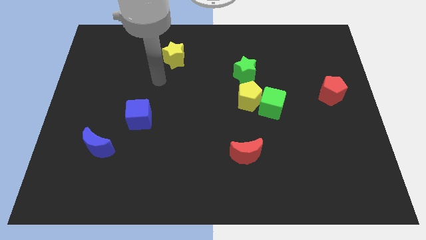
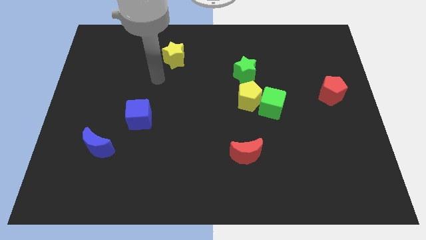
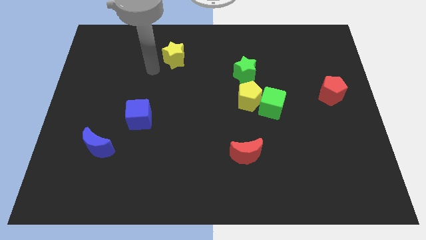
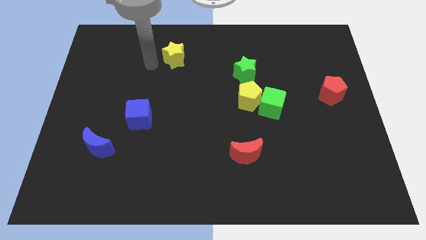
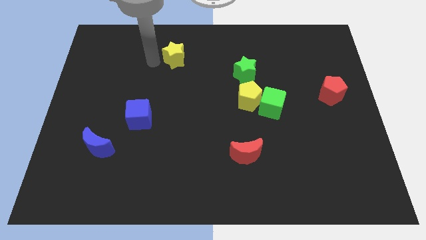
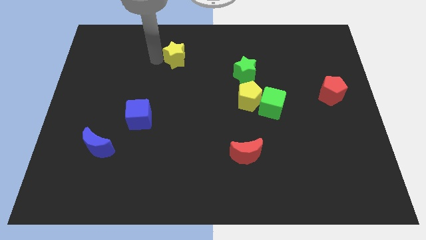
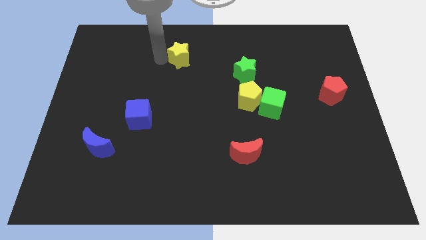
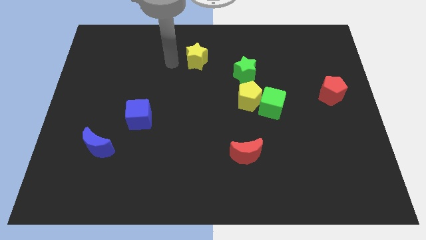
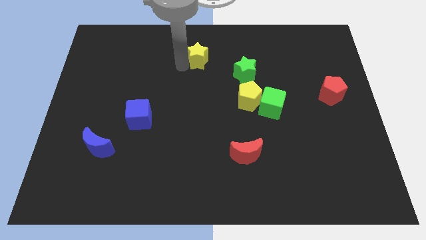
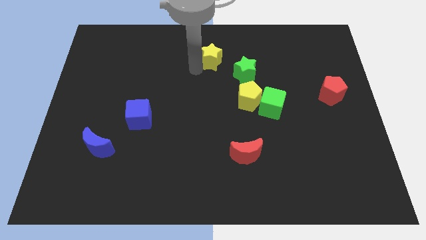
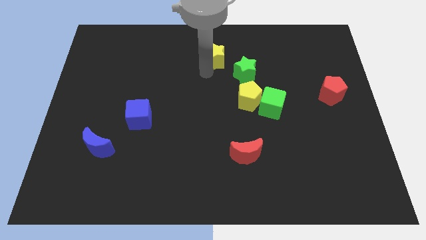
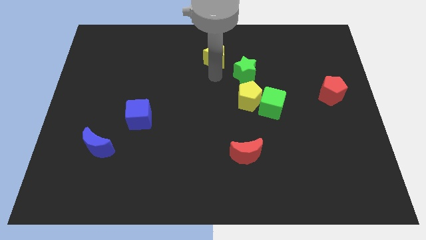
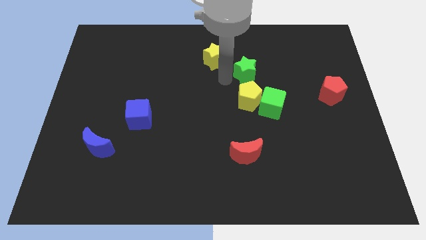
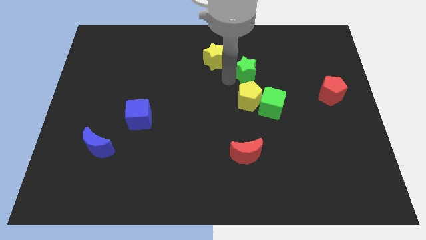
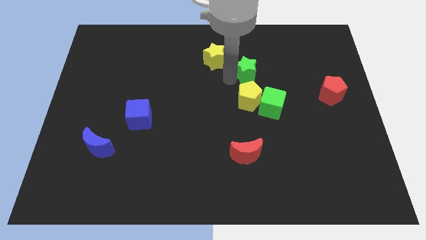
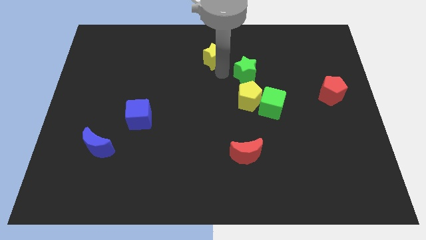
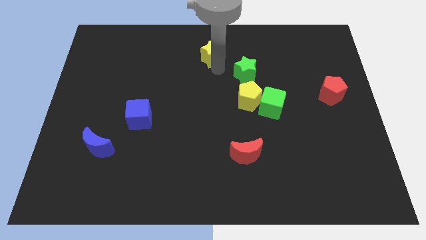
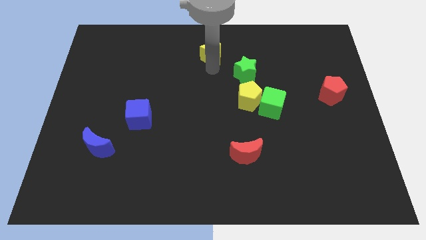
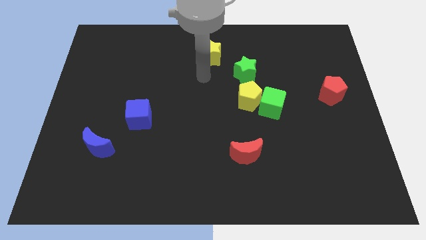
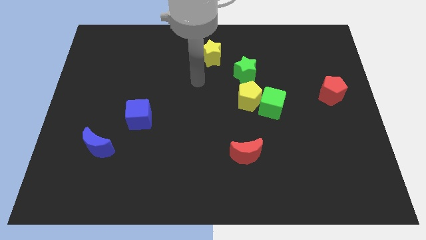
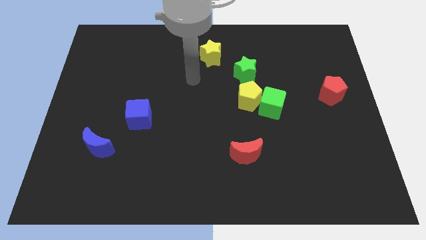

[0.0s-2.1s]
slightly push yellow star towards the green star

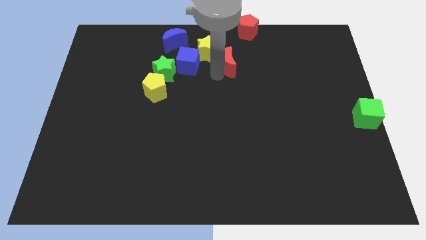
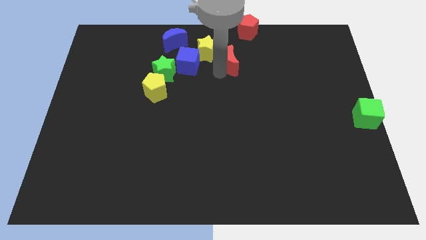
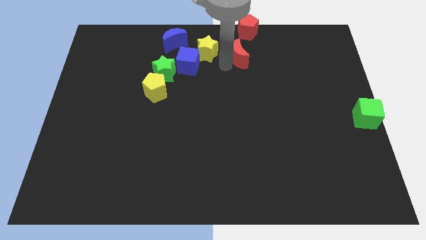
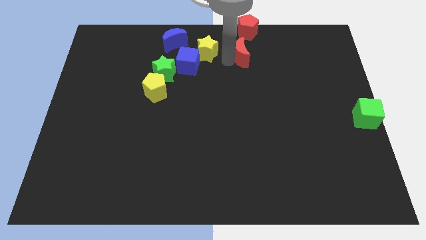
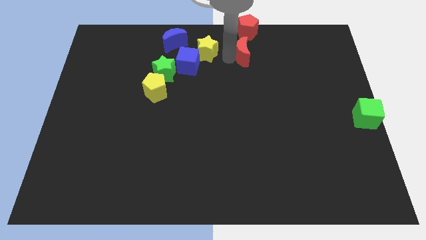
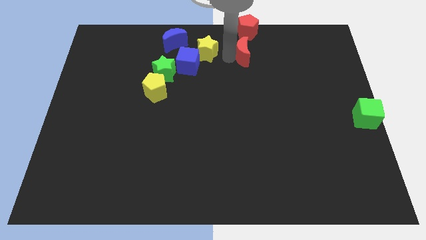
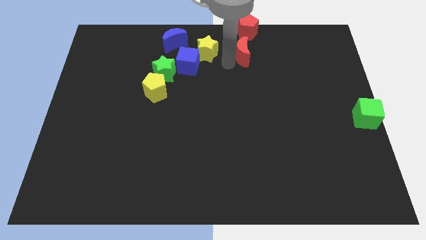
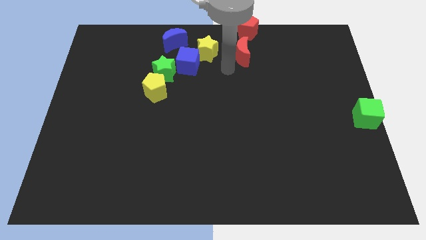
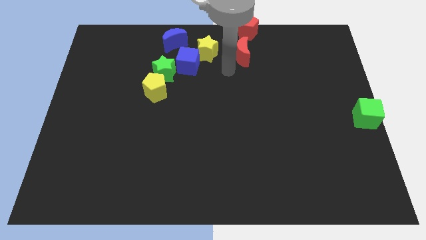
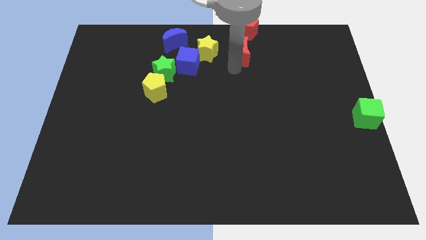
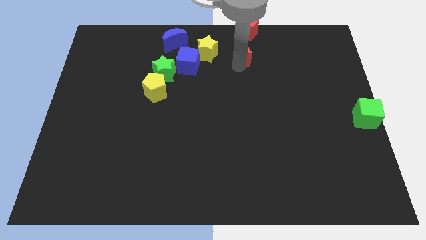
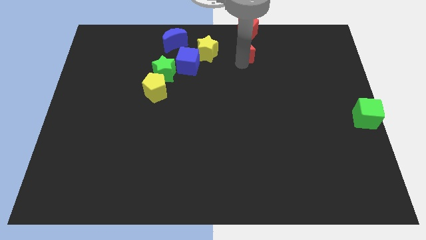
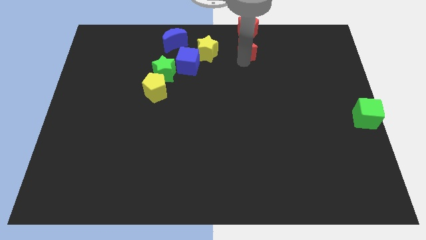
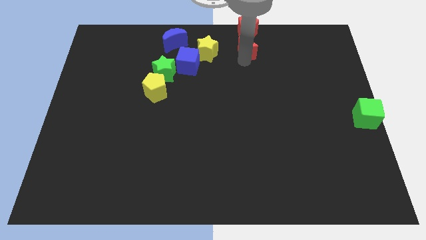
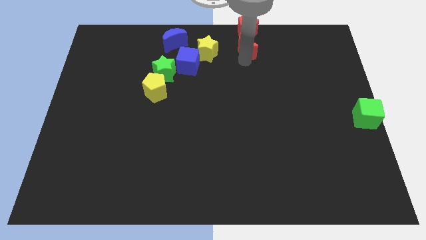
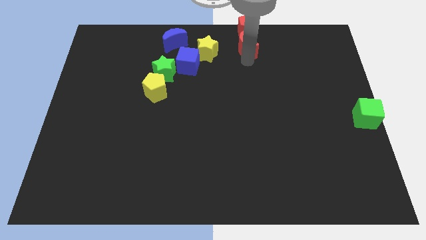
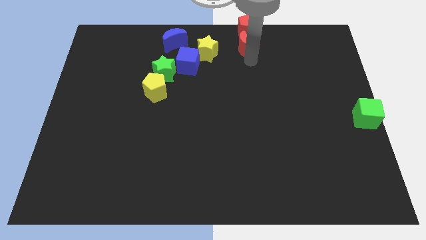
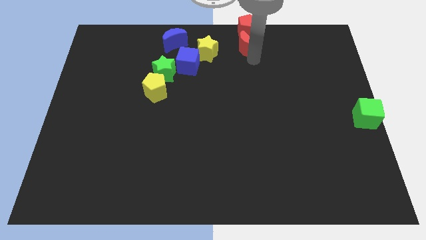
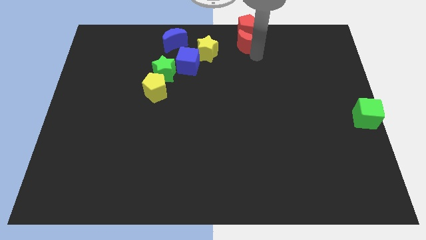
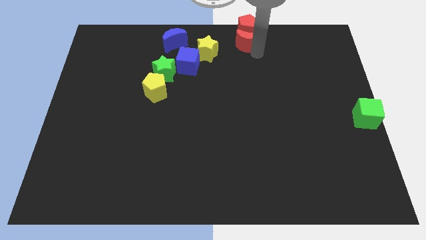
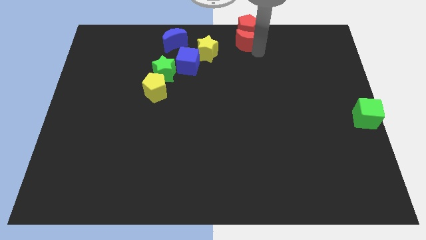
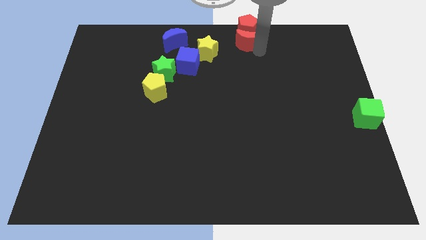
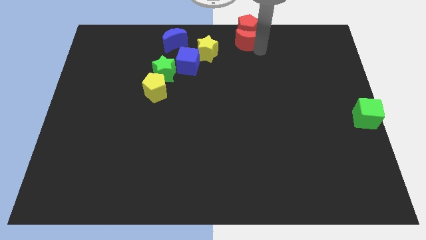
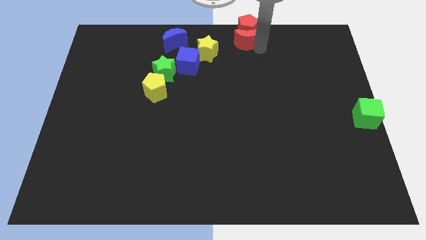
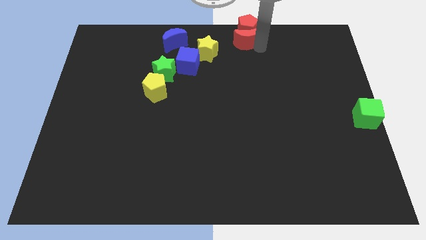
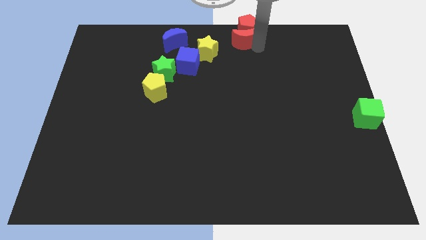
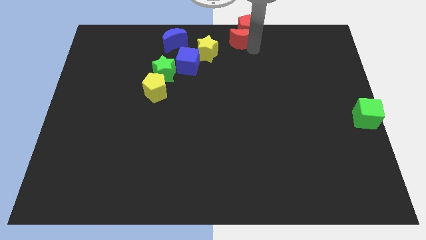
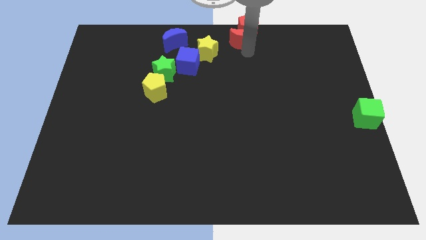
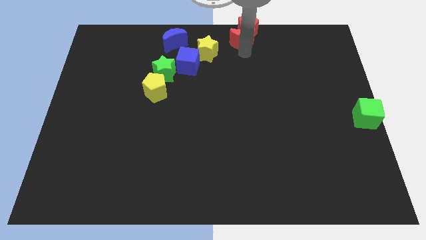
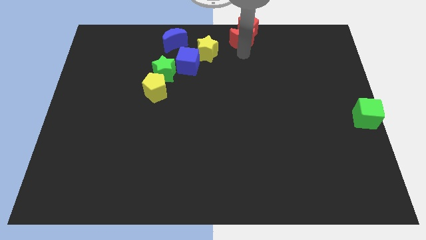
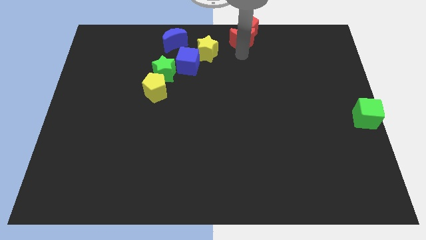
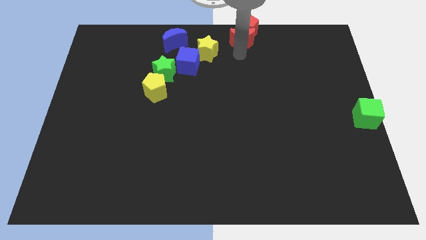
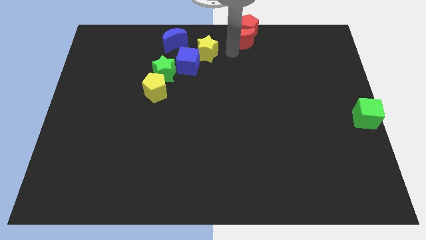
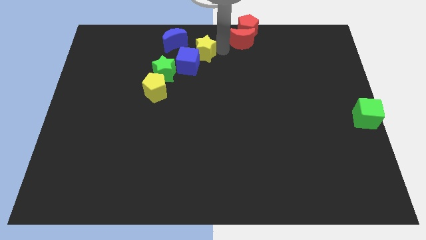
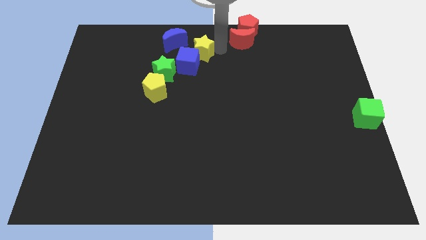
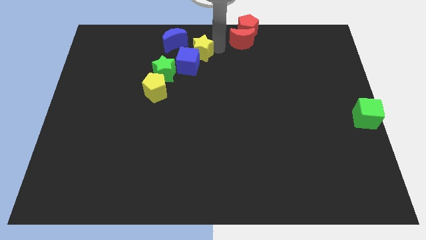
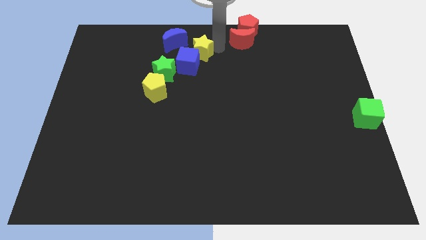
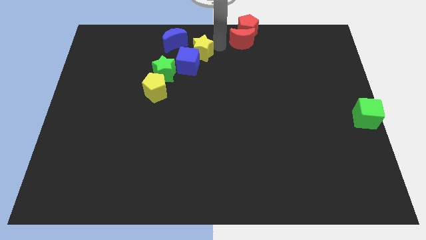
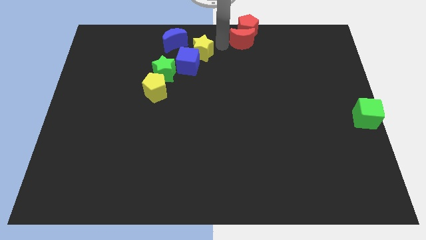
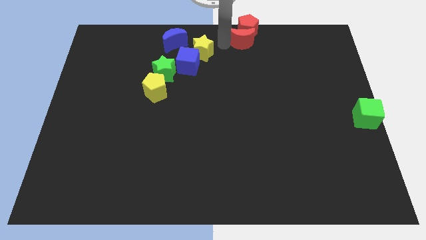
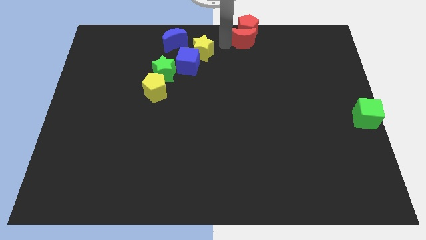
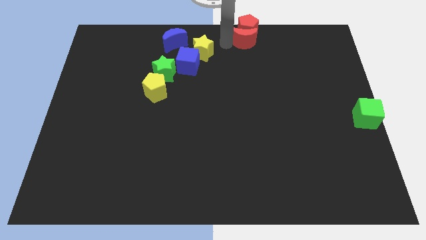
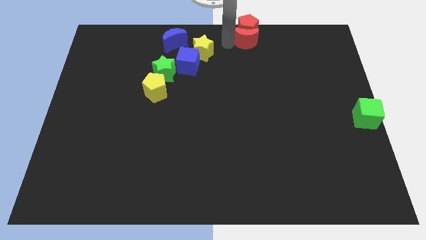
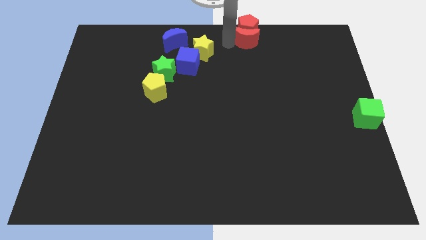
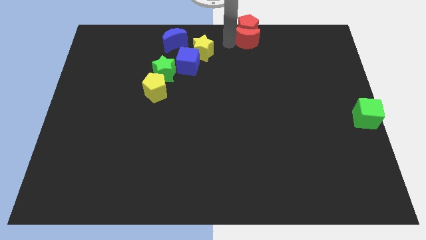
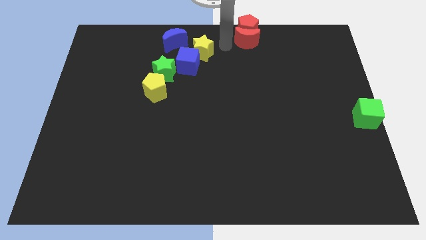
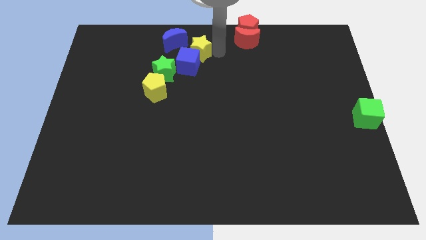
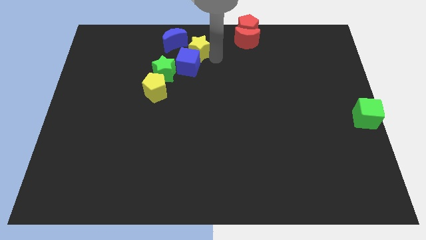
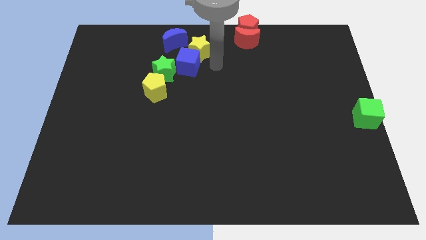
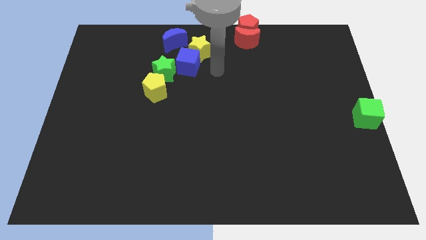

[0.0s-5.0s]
push the red crescent into the red pentagon

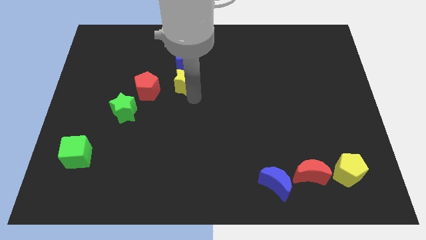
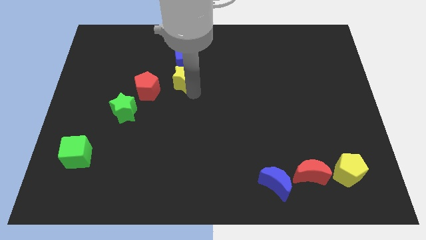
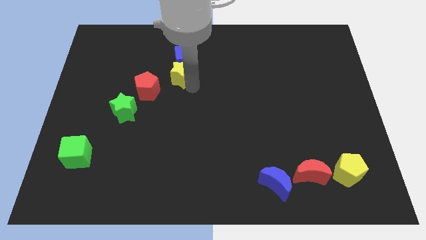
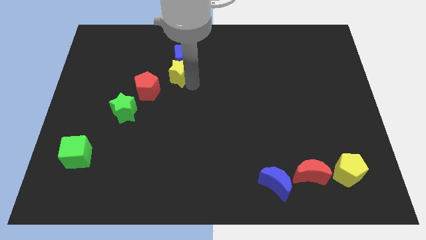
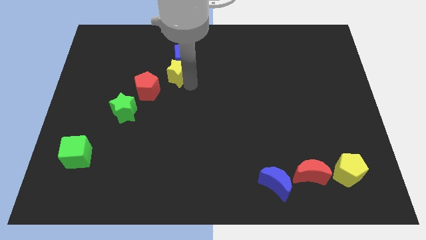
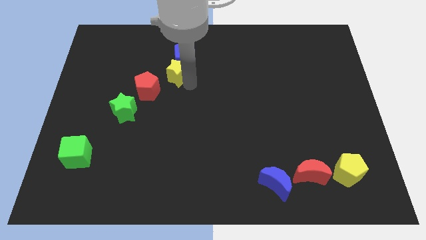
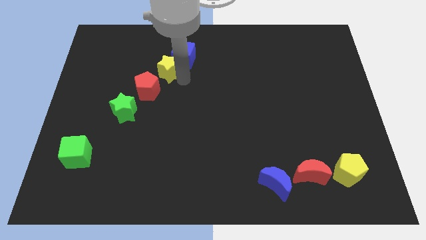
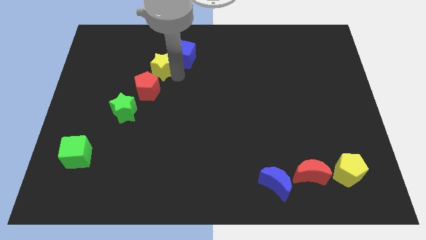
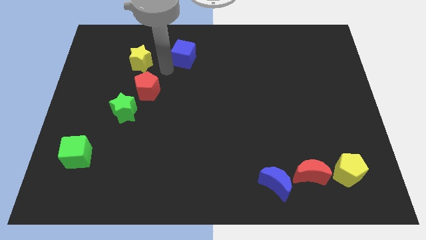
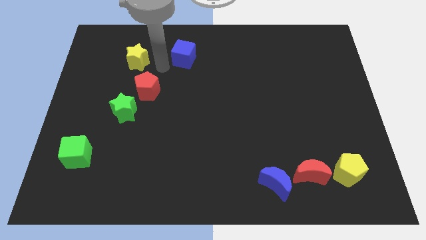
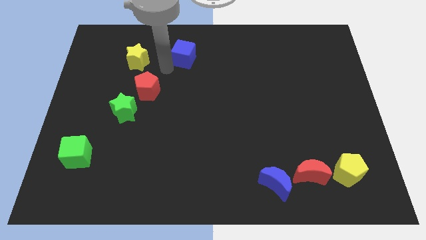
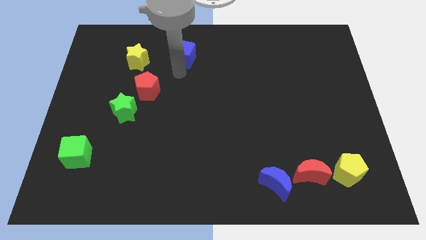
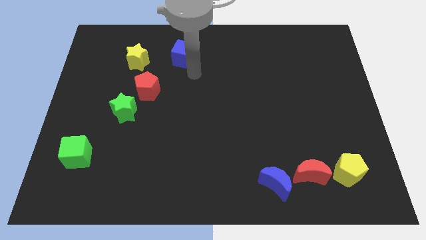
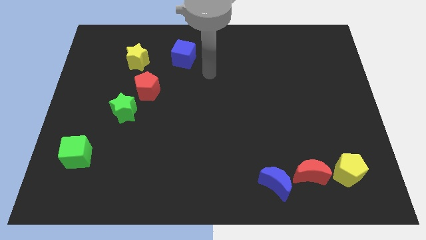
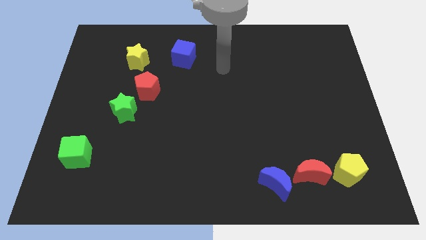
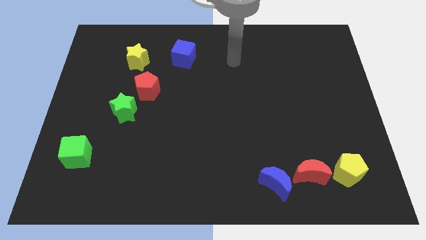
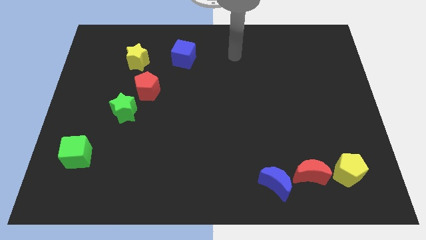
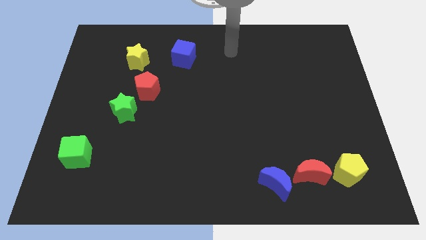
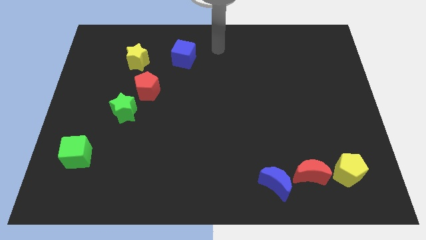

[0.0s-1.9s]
push yellow star away from red pentagon and blue cube
